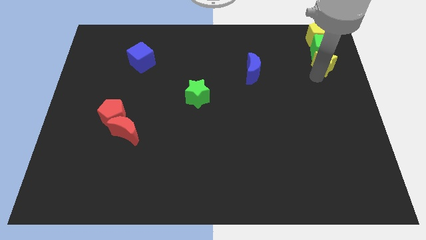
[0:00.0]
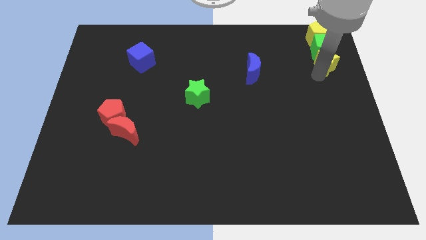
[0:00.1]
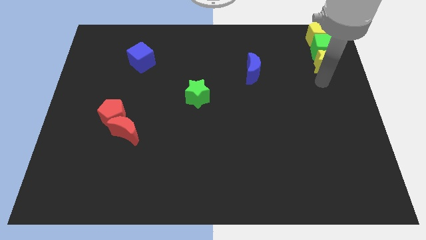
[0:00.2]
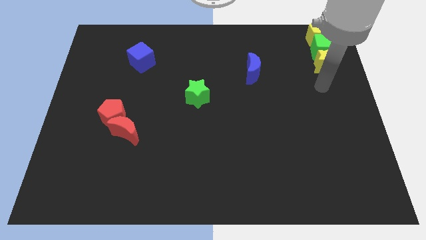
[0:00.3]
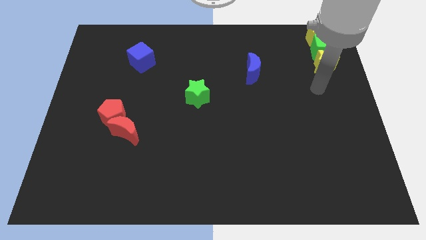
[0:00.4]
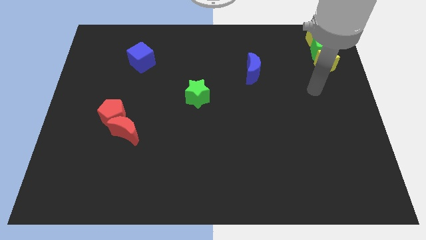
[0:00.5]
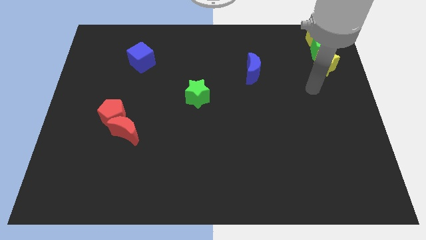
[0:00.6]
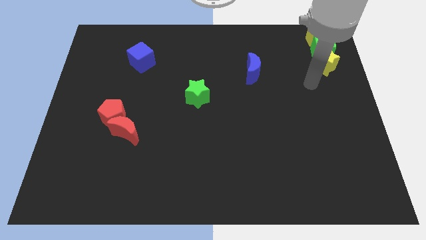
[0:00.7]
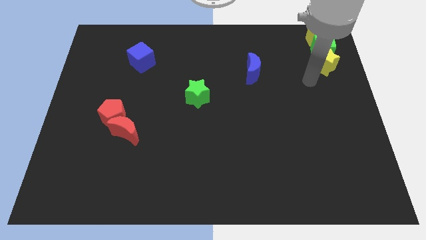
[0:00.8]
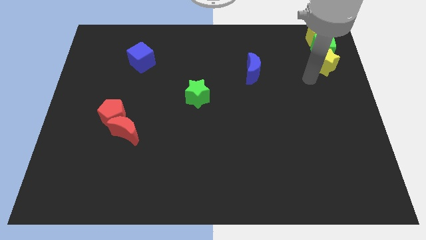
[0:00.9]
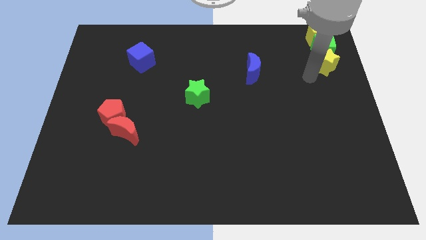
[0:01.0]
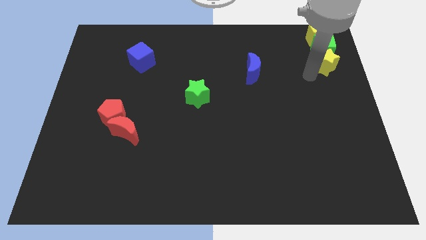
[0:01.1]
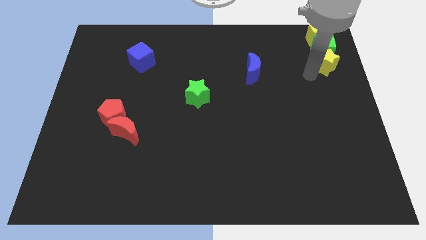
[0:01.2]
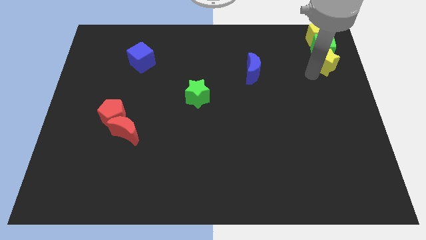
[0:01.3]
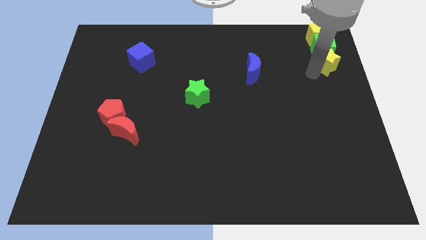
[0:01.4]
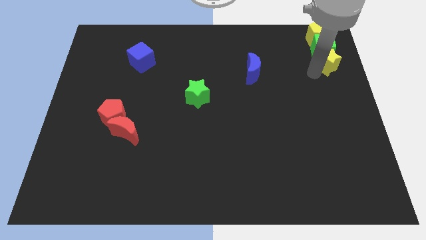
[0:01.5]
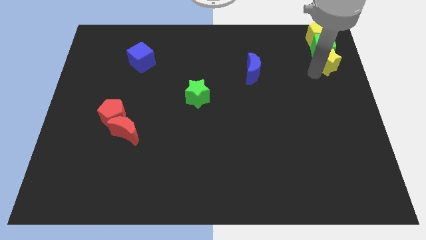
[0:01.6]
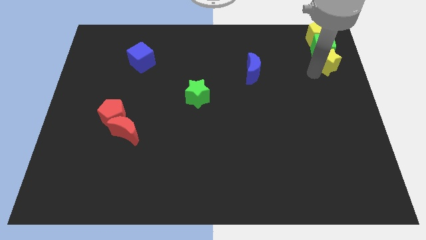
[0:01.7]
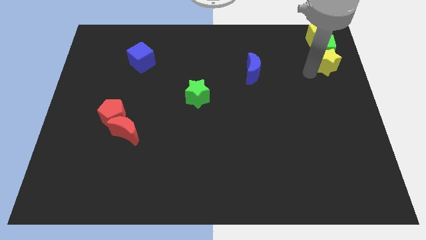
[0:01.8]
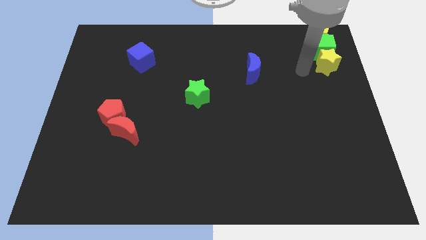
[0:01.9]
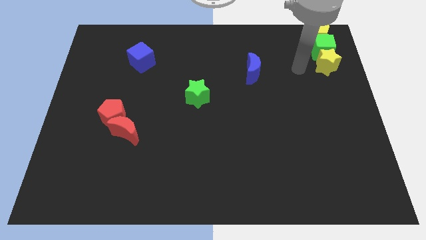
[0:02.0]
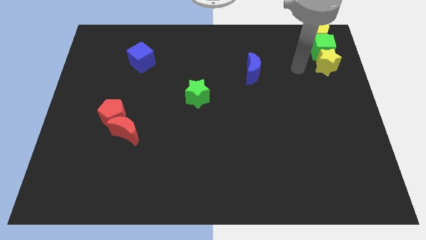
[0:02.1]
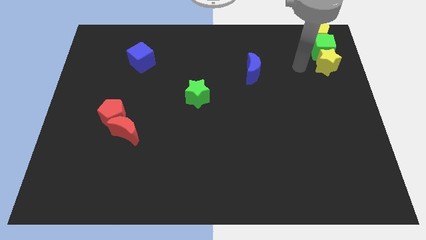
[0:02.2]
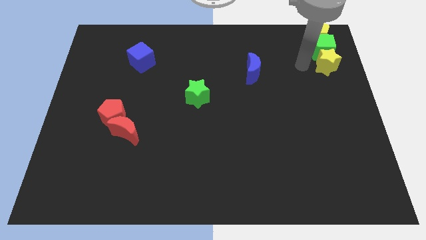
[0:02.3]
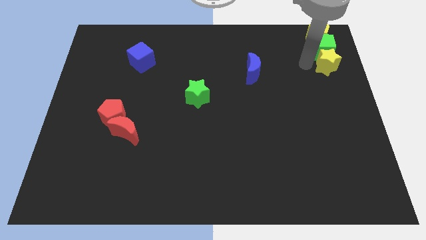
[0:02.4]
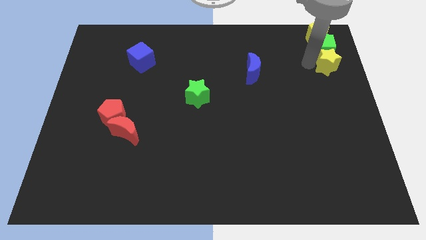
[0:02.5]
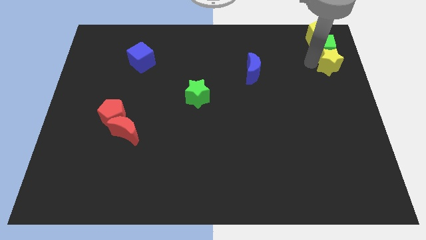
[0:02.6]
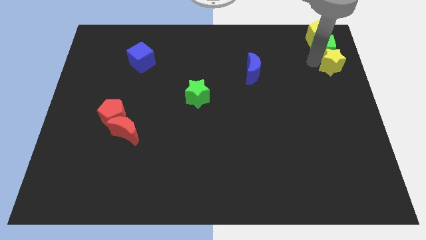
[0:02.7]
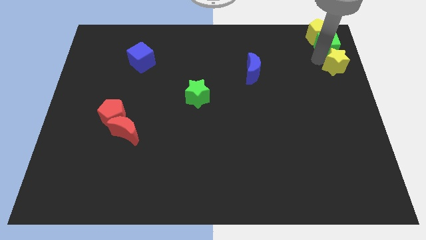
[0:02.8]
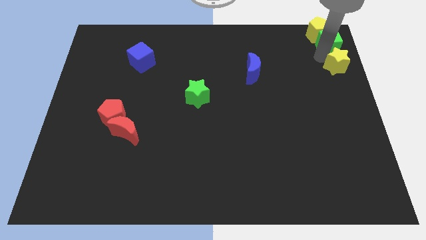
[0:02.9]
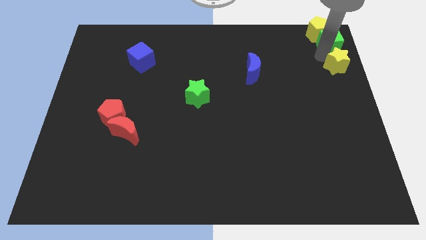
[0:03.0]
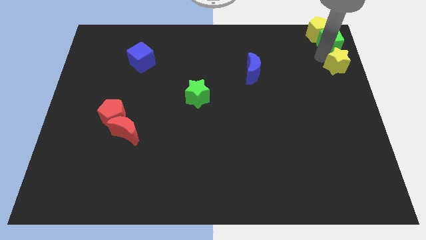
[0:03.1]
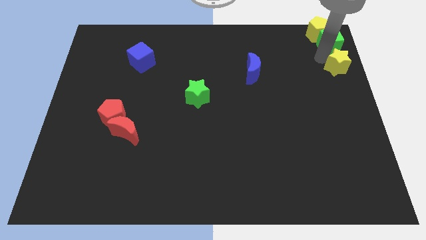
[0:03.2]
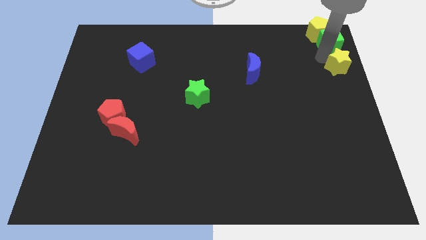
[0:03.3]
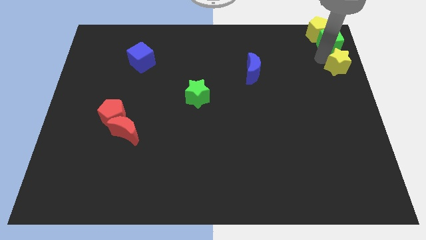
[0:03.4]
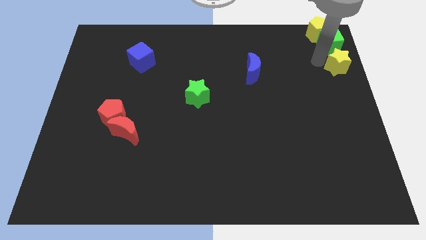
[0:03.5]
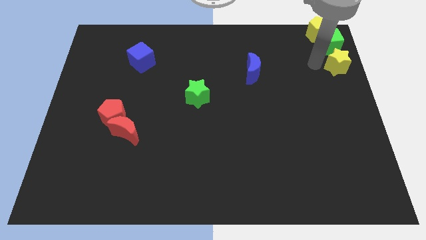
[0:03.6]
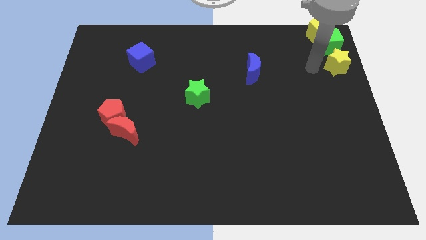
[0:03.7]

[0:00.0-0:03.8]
push green cube to the top right corner of the board

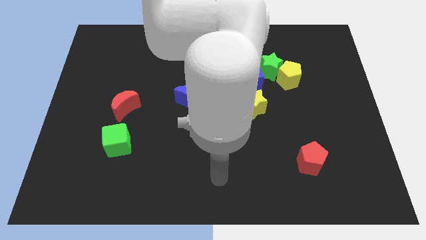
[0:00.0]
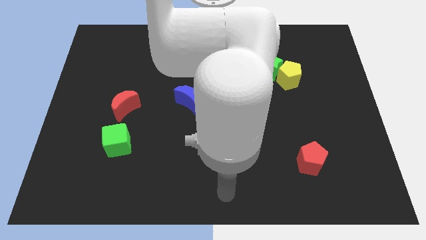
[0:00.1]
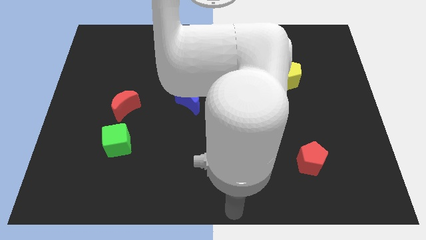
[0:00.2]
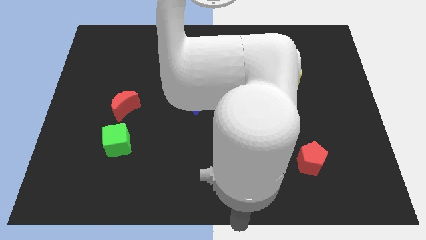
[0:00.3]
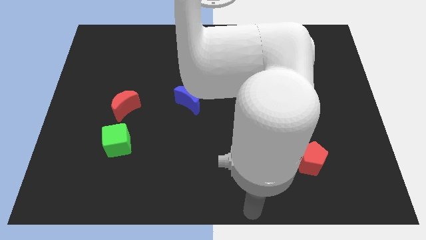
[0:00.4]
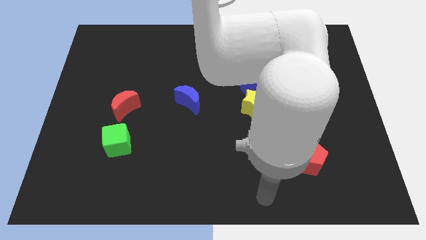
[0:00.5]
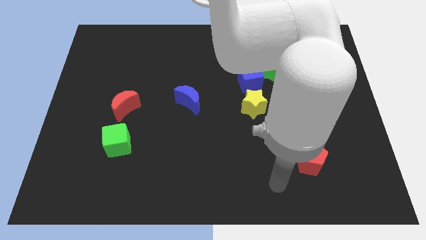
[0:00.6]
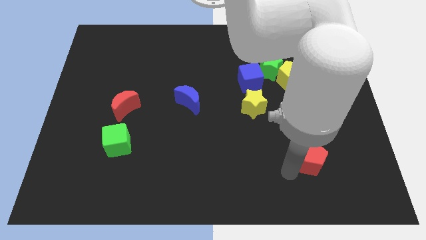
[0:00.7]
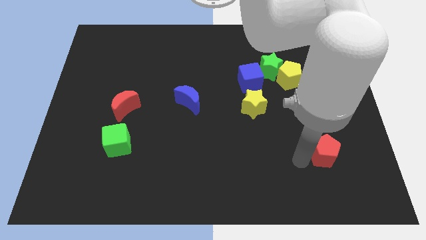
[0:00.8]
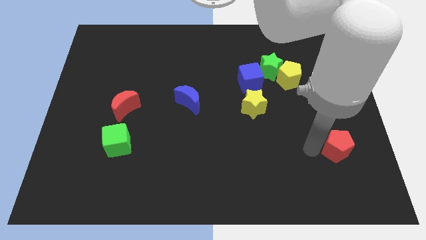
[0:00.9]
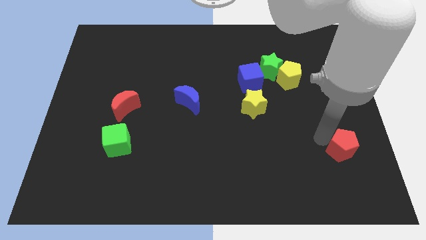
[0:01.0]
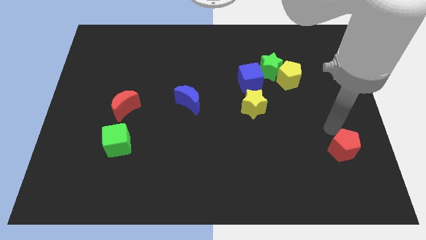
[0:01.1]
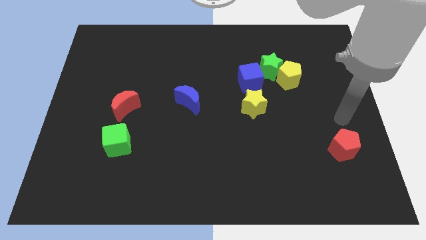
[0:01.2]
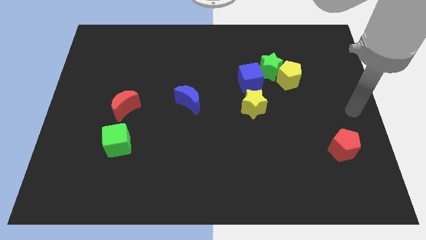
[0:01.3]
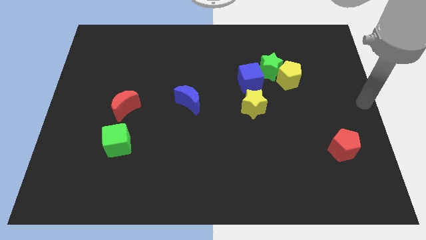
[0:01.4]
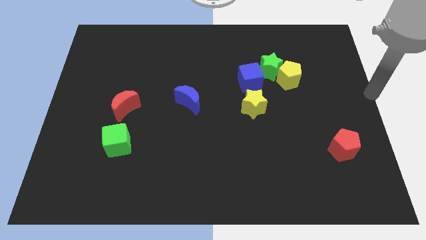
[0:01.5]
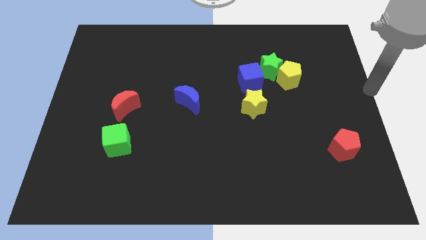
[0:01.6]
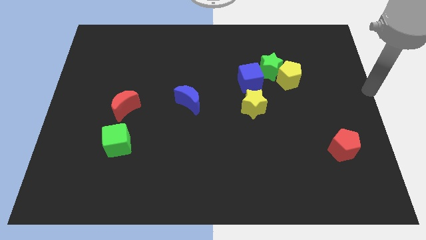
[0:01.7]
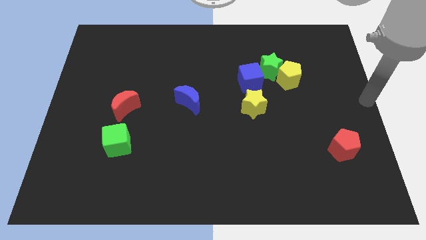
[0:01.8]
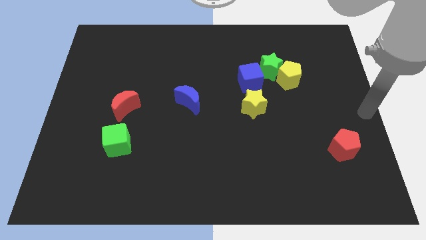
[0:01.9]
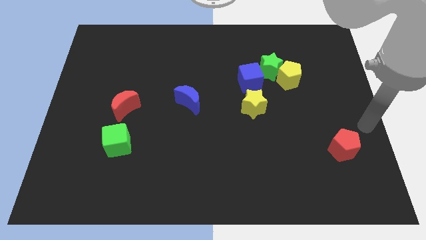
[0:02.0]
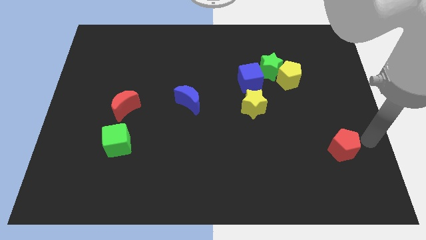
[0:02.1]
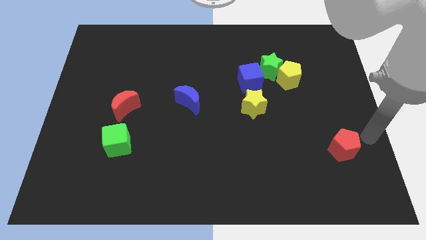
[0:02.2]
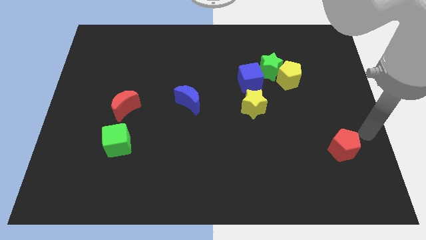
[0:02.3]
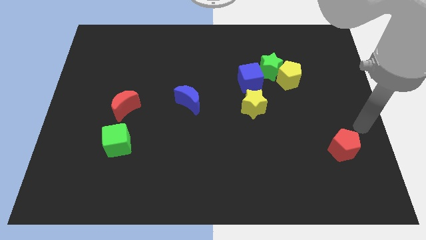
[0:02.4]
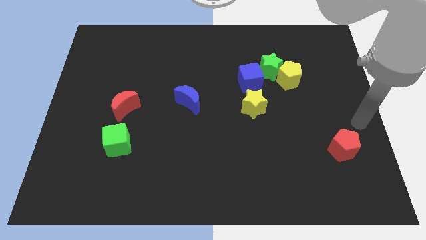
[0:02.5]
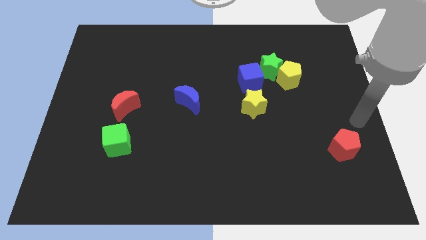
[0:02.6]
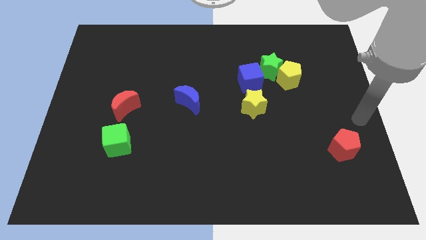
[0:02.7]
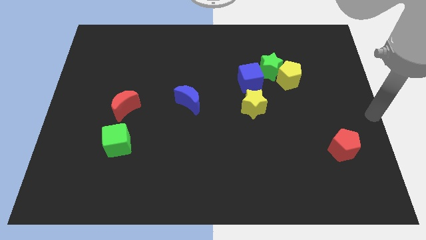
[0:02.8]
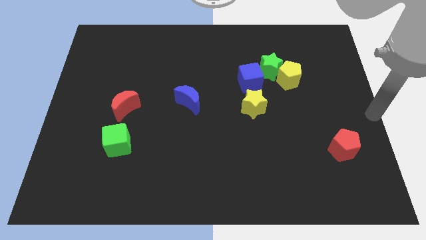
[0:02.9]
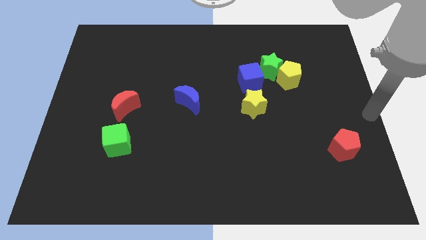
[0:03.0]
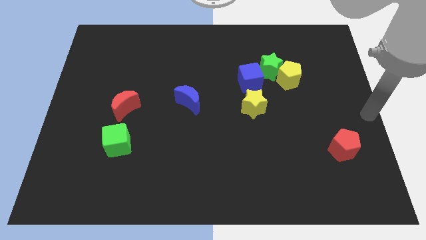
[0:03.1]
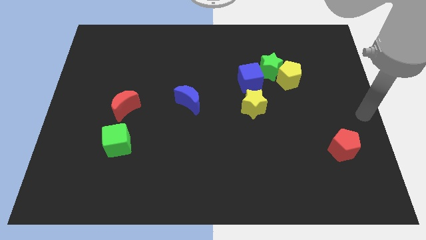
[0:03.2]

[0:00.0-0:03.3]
move the red pentagon slightly to the bottom right of the board

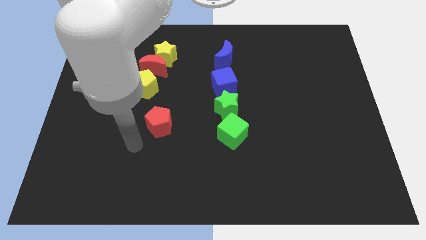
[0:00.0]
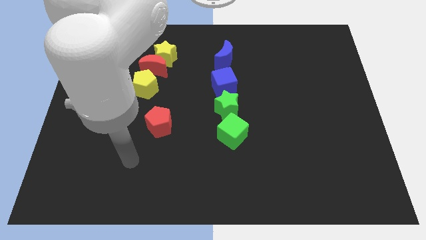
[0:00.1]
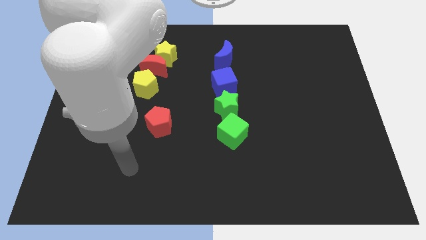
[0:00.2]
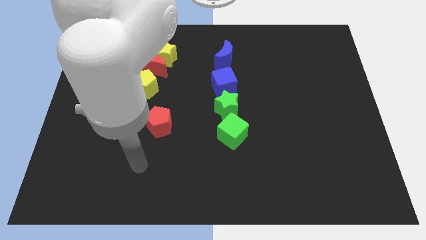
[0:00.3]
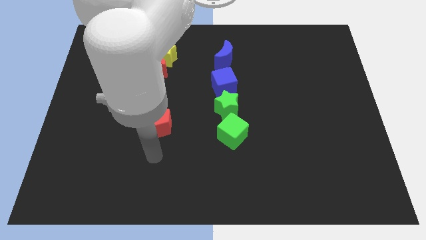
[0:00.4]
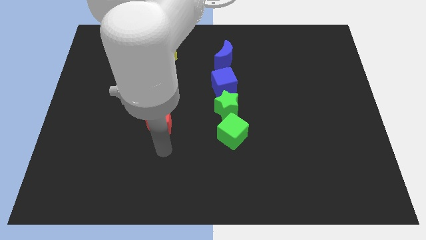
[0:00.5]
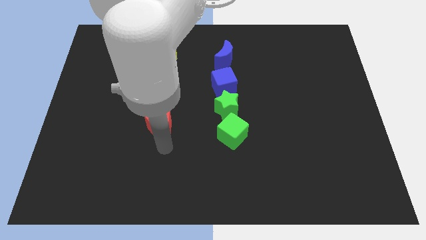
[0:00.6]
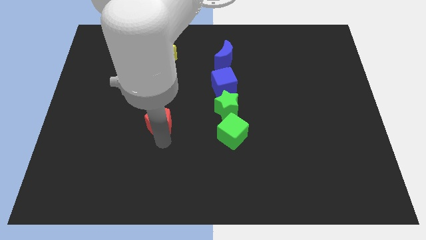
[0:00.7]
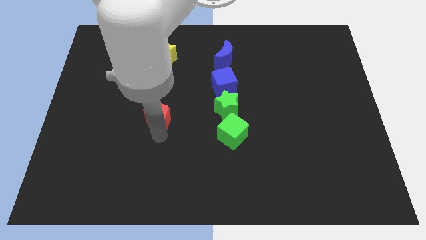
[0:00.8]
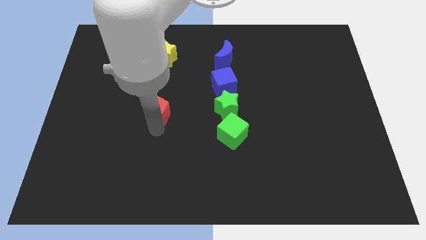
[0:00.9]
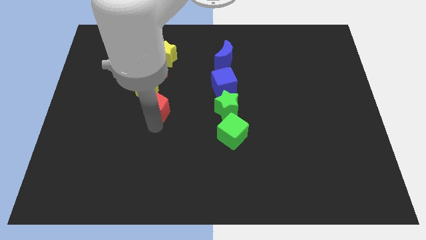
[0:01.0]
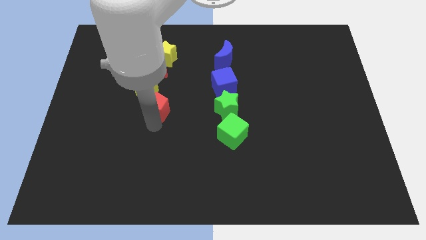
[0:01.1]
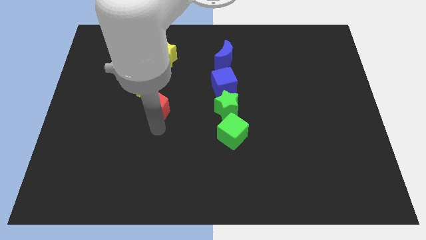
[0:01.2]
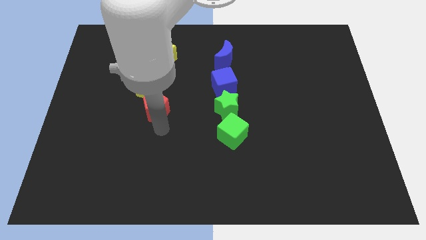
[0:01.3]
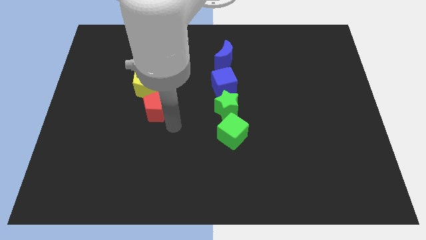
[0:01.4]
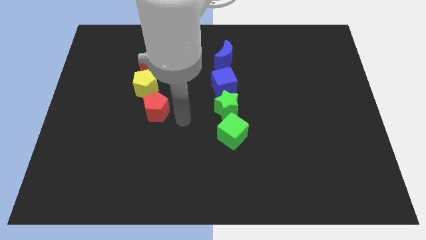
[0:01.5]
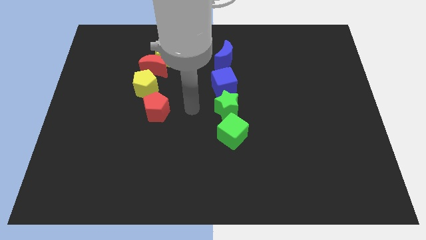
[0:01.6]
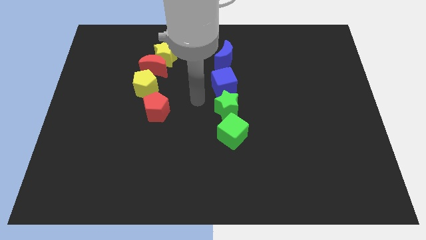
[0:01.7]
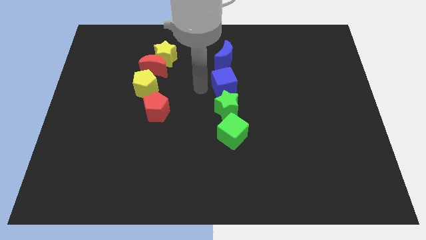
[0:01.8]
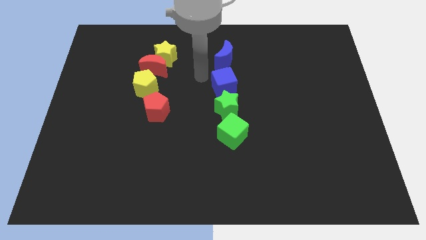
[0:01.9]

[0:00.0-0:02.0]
slide the red pentagon horizontally to the left side of the green star
